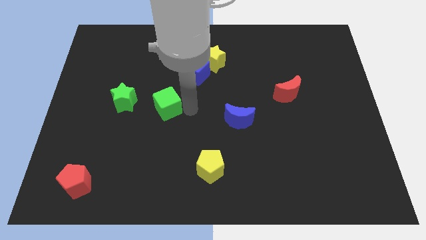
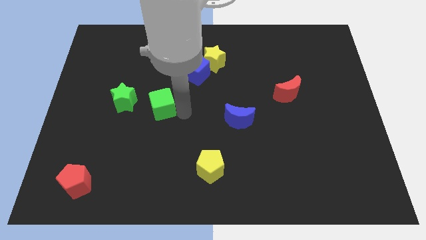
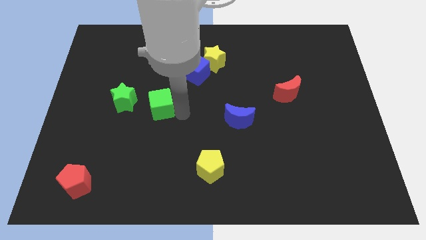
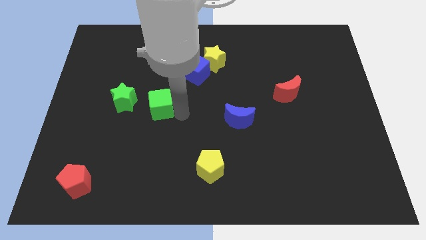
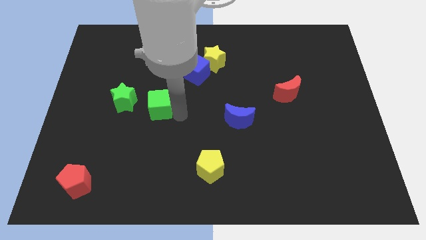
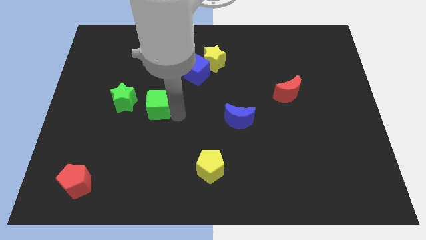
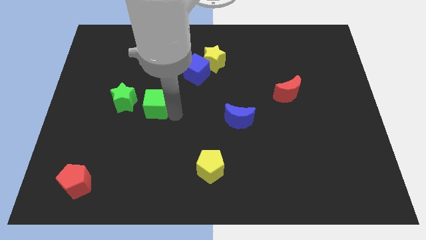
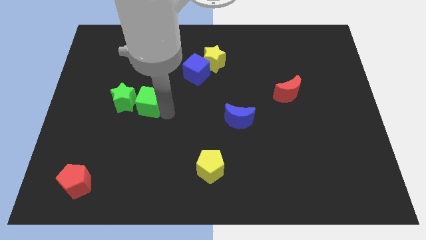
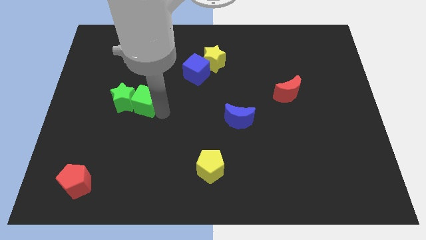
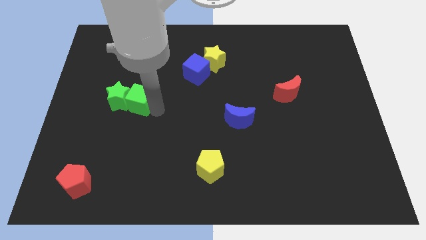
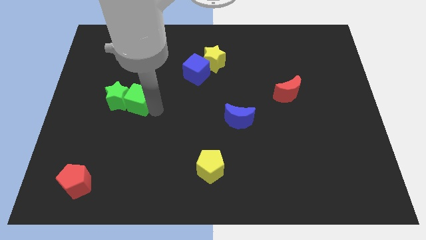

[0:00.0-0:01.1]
move the green cube to the right to the green star

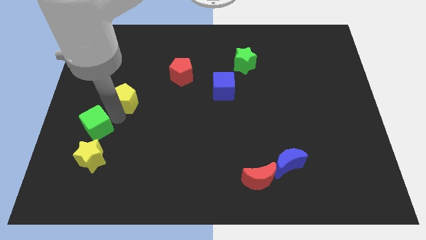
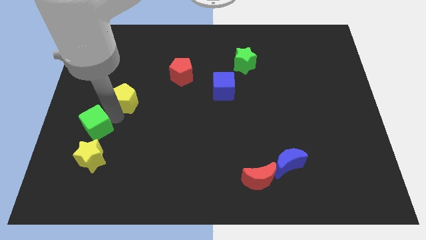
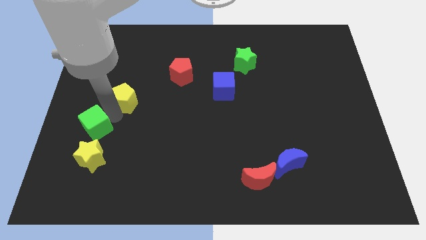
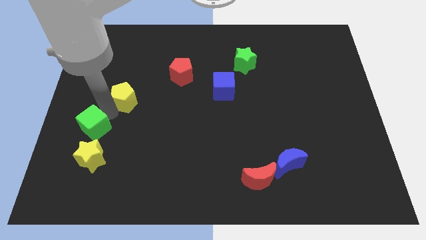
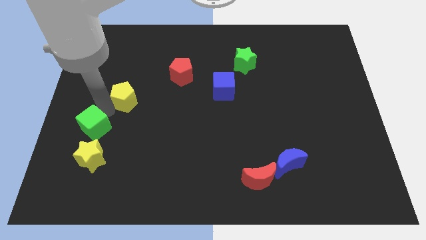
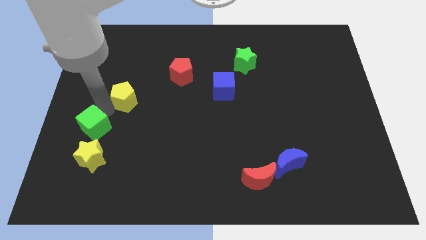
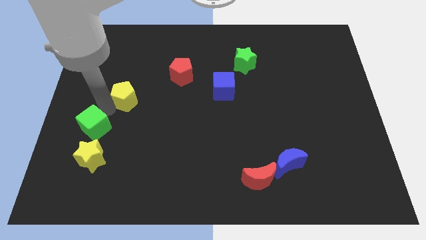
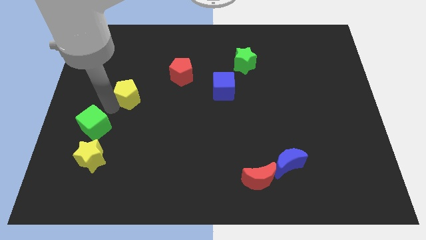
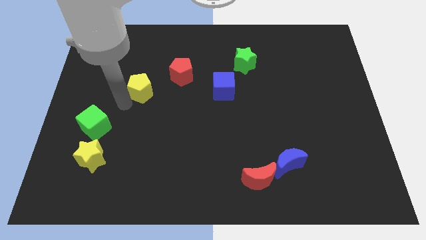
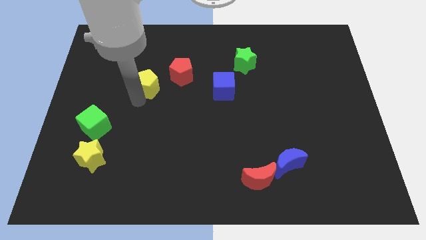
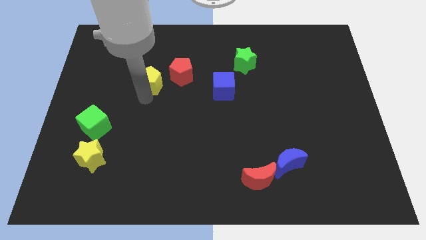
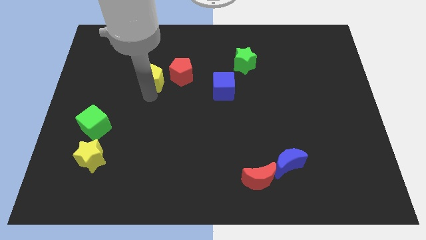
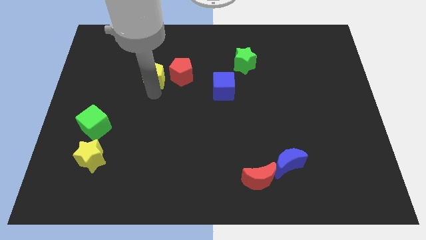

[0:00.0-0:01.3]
push the yellow pentagon closer to the red pentagon

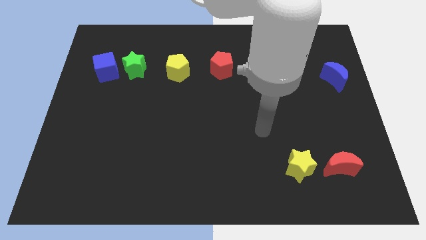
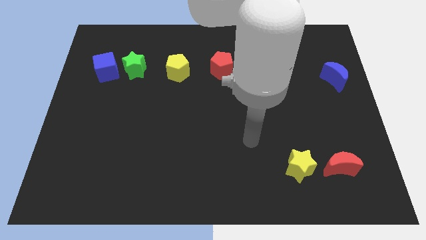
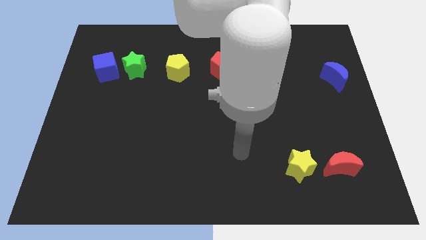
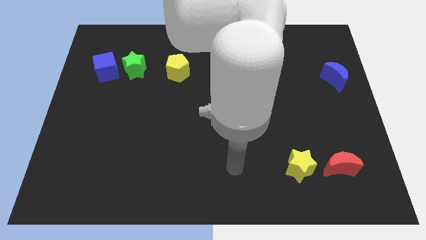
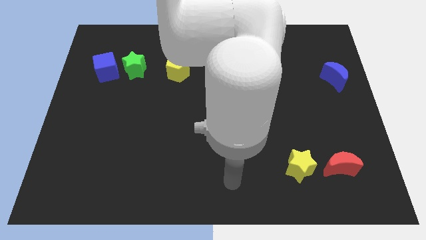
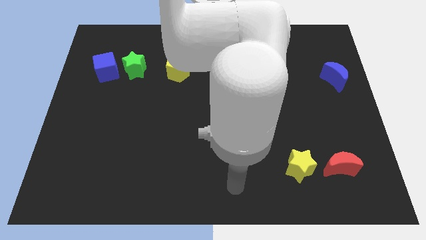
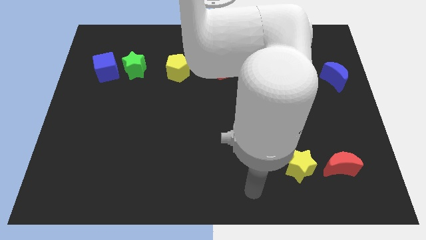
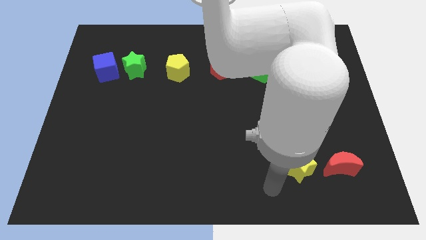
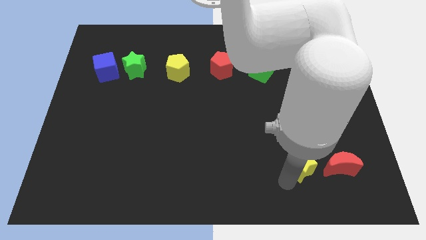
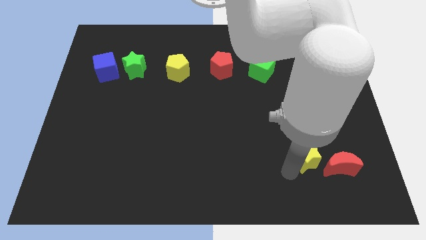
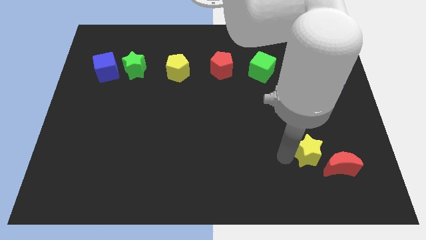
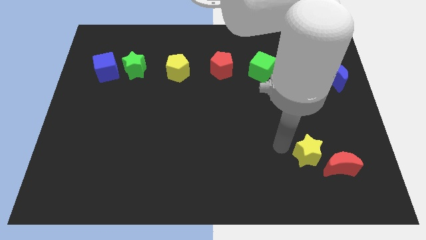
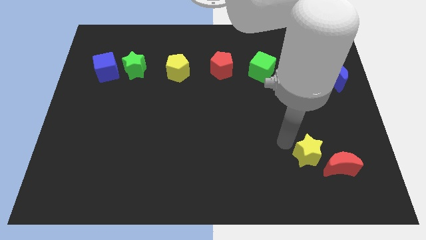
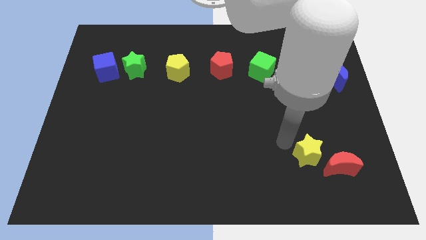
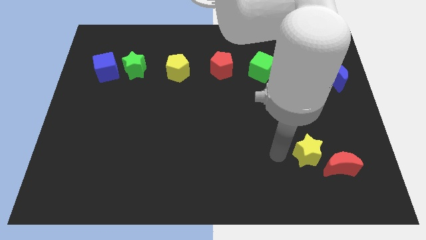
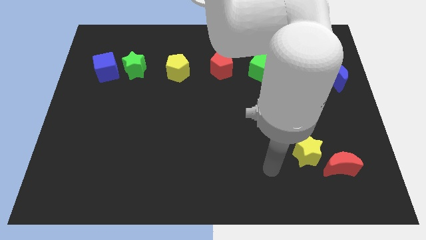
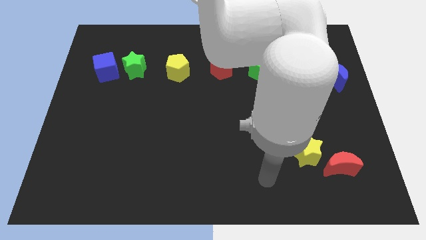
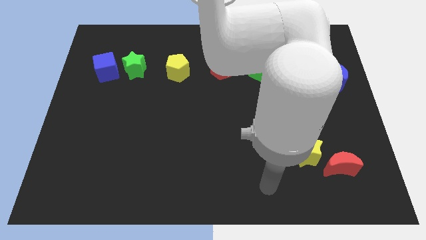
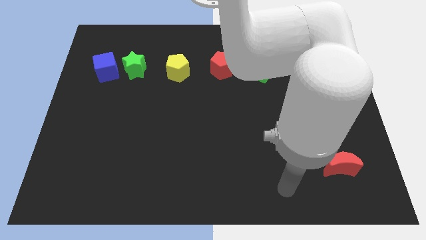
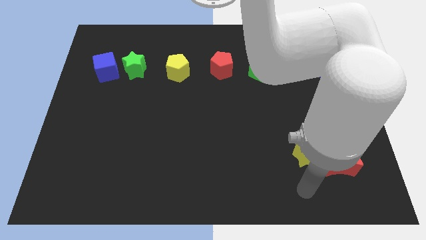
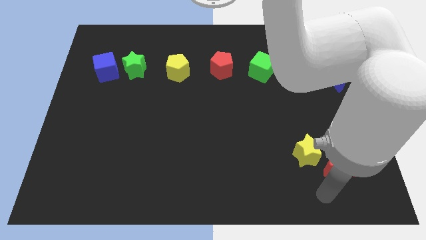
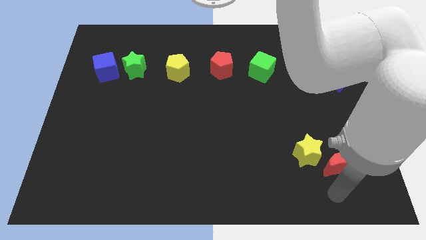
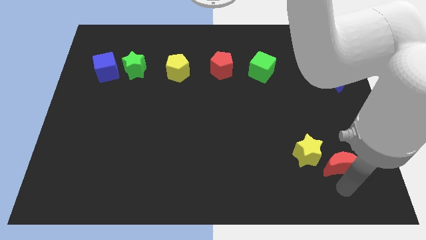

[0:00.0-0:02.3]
move your arm to the bottom side of the red moon

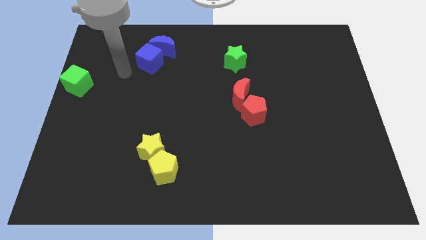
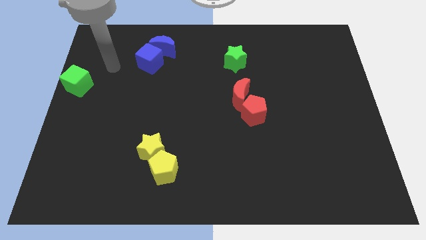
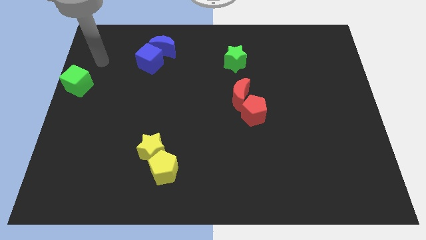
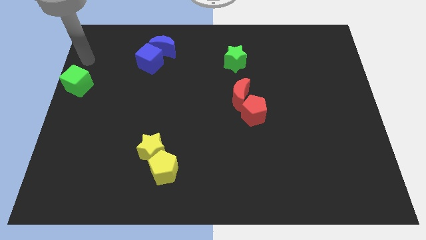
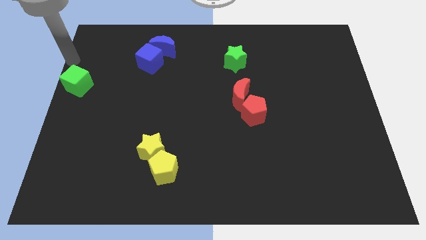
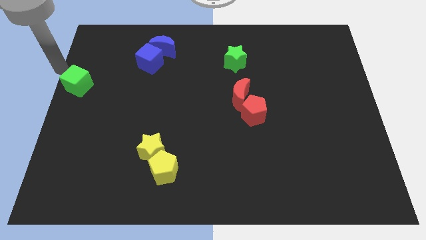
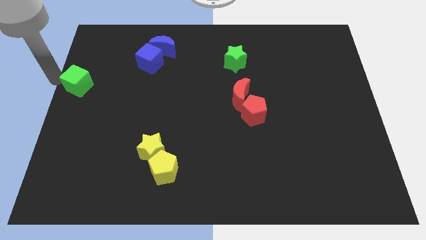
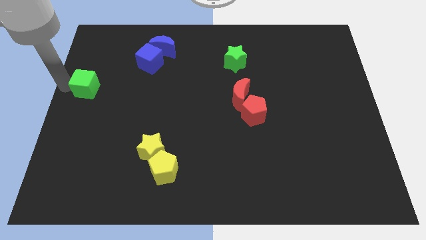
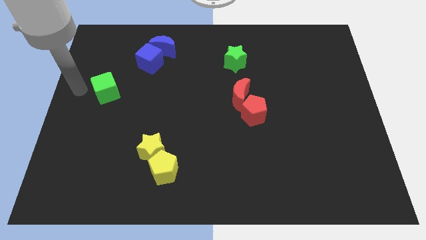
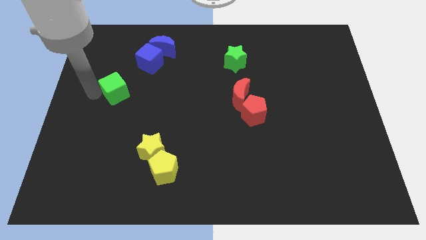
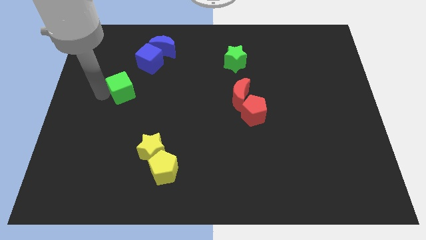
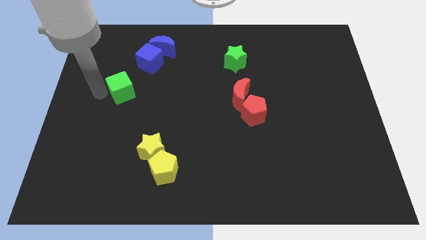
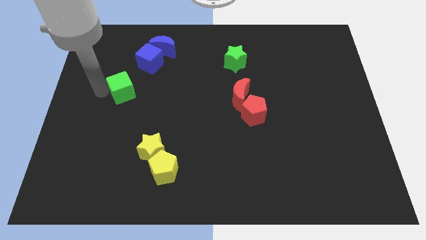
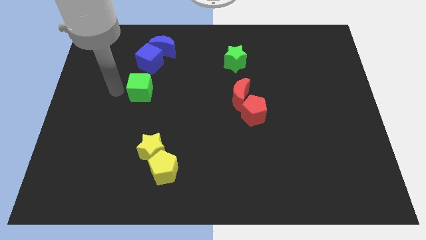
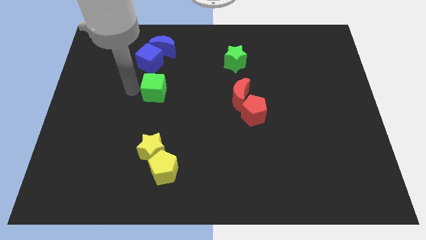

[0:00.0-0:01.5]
push the green cube to the bottom of the blue cube

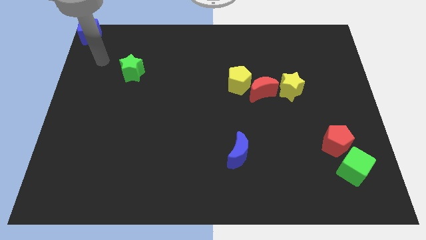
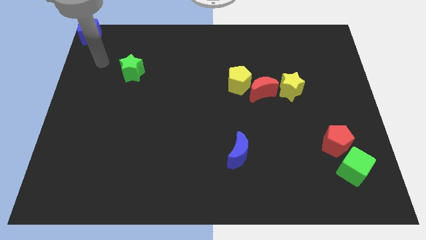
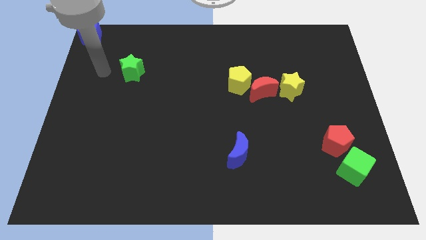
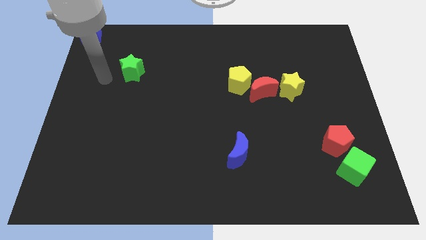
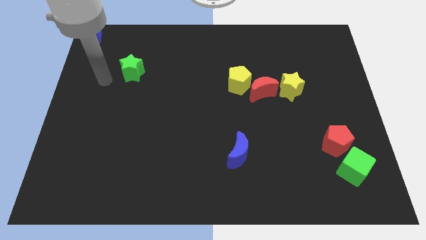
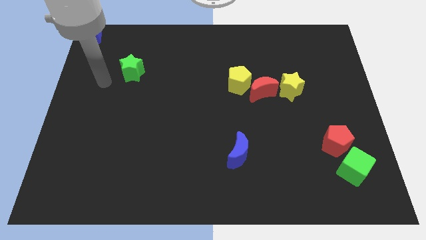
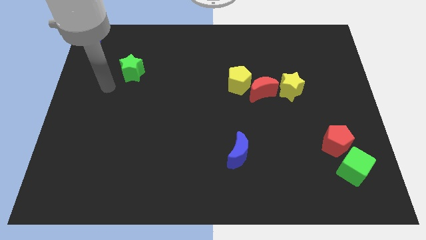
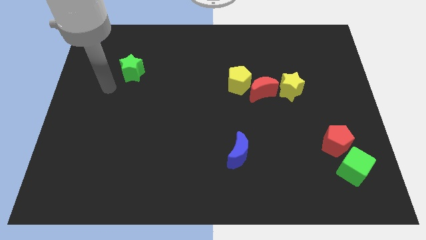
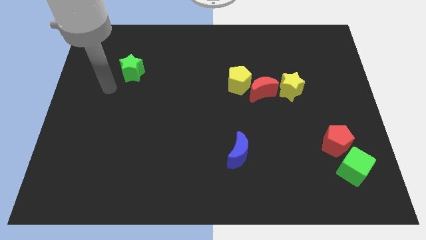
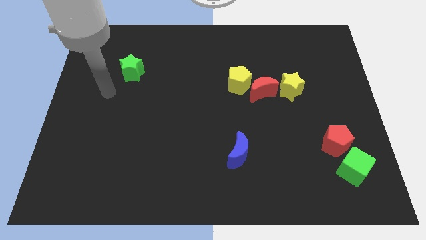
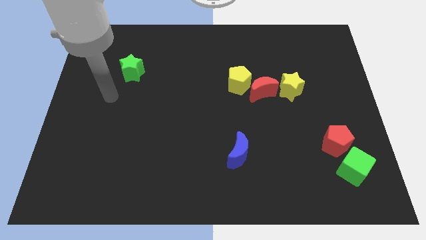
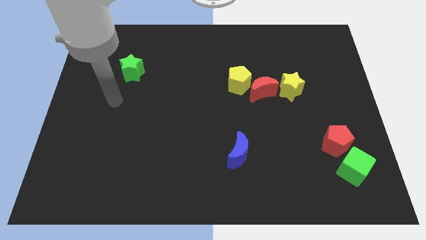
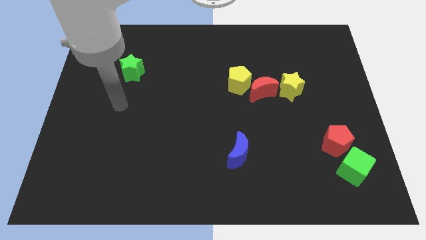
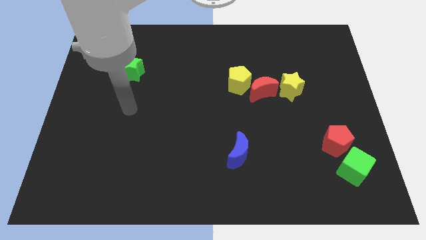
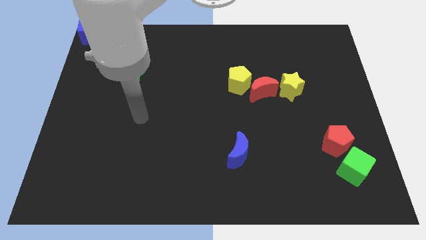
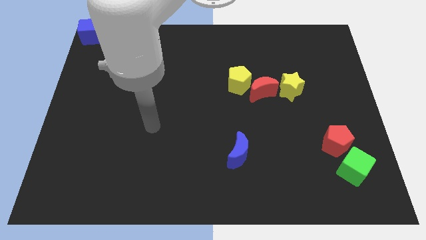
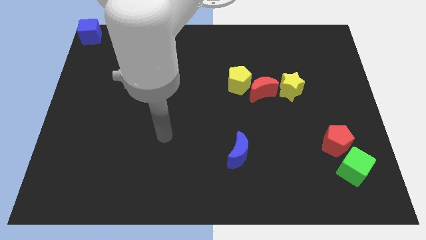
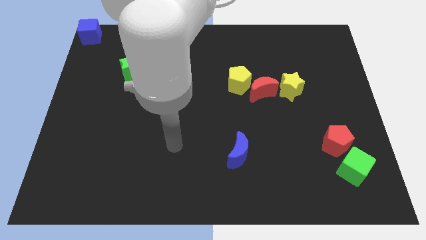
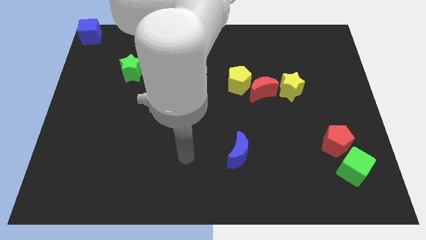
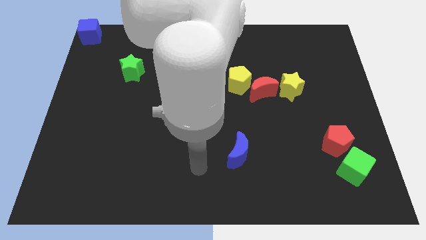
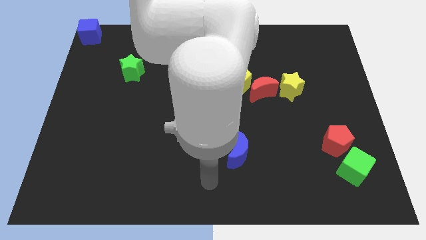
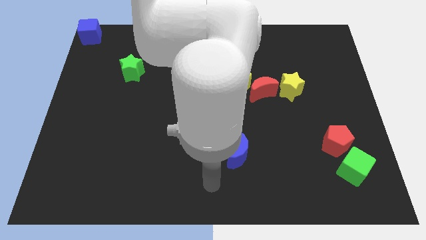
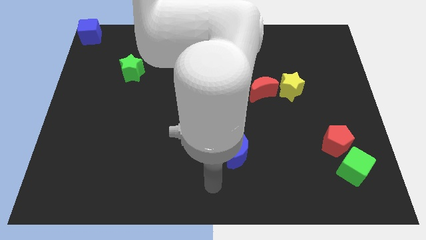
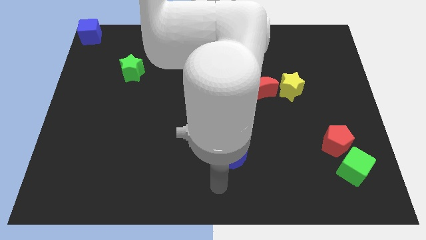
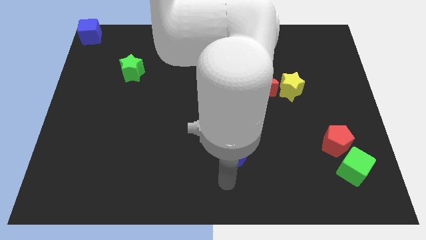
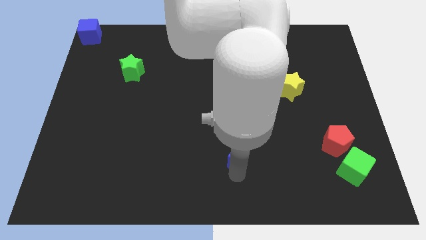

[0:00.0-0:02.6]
point your arm at the bottom of the blue crescent

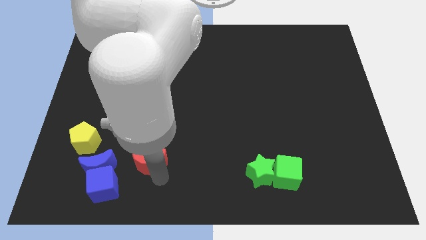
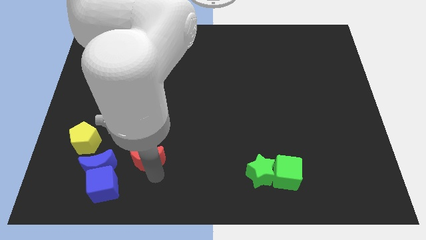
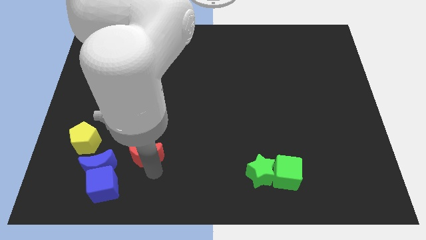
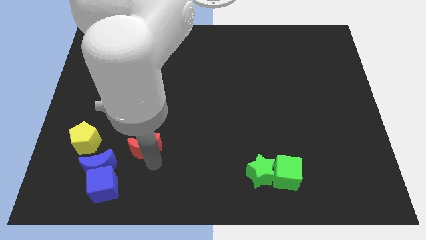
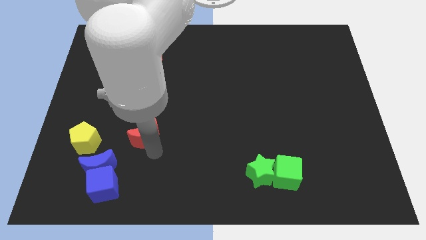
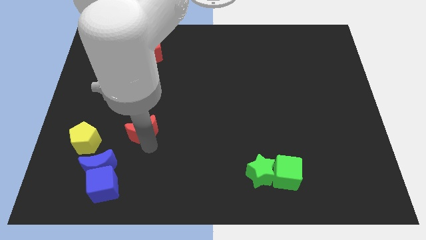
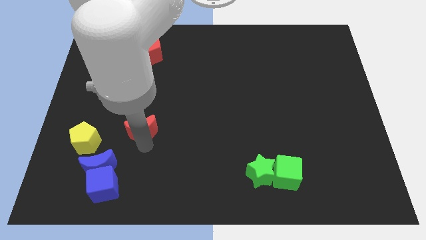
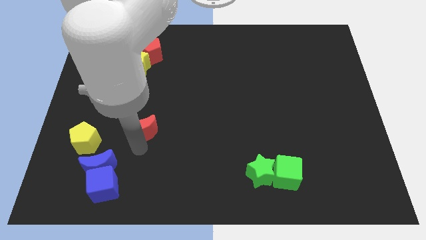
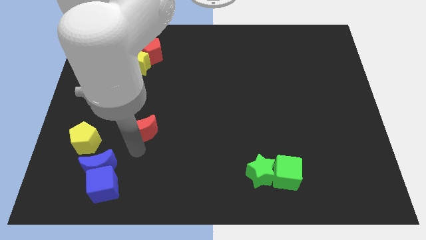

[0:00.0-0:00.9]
push the red crescent upwards
